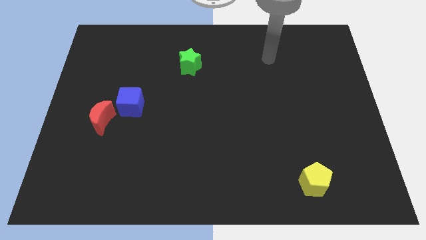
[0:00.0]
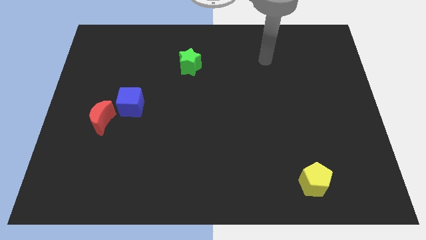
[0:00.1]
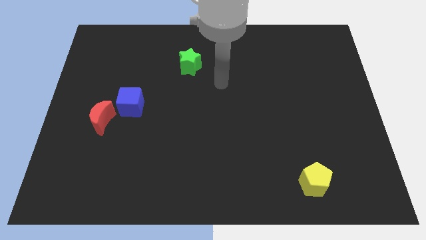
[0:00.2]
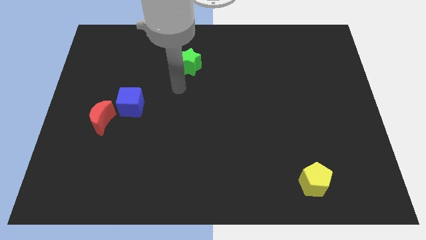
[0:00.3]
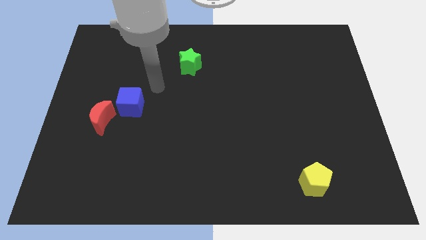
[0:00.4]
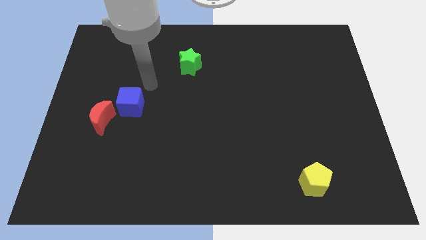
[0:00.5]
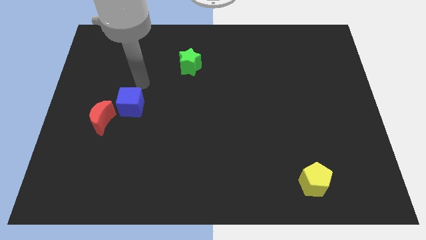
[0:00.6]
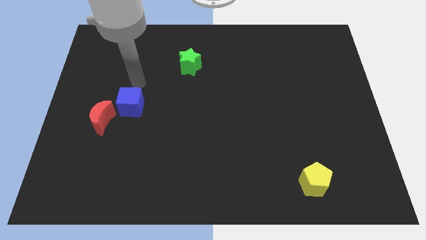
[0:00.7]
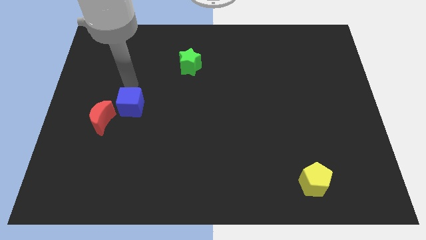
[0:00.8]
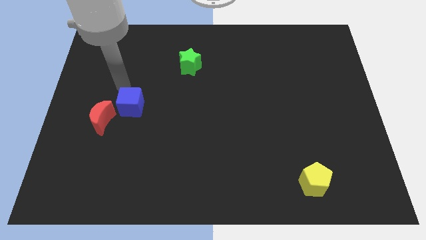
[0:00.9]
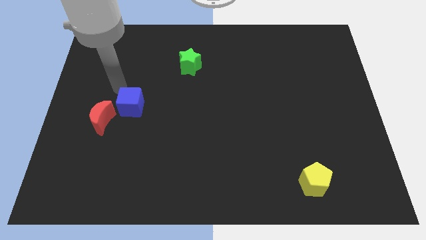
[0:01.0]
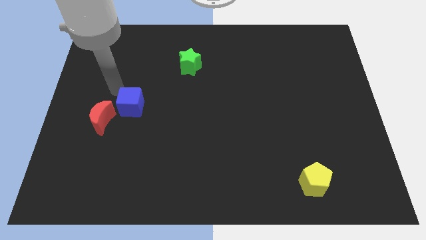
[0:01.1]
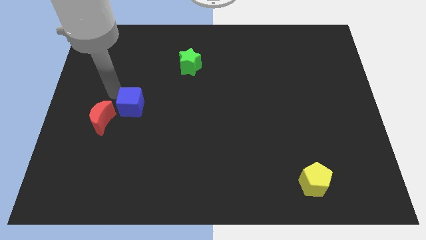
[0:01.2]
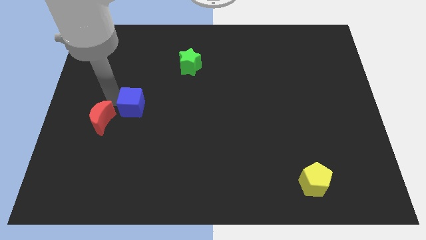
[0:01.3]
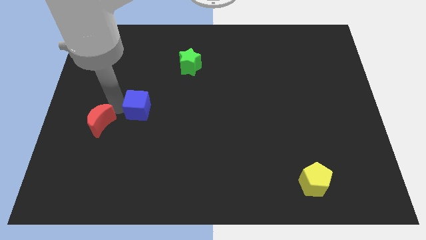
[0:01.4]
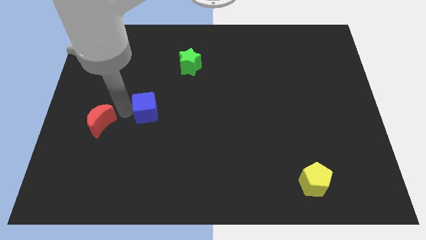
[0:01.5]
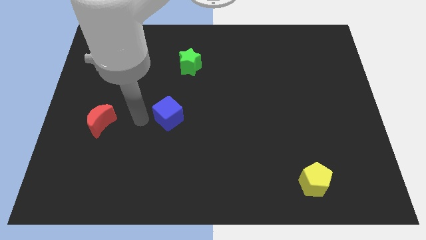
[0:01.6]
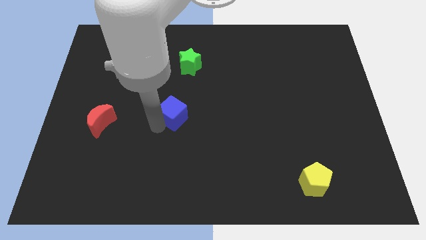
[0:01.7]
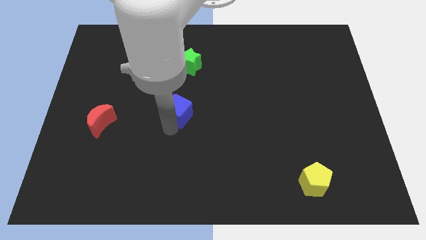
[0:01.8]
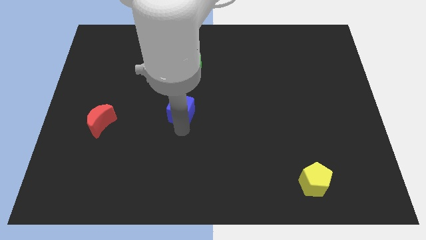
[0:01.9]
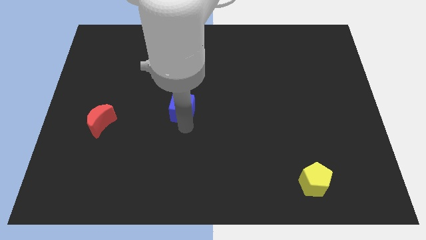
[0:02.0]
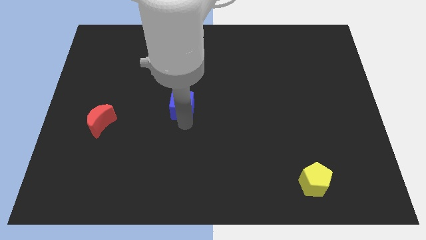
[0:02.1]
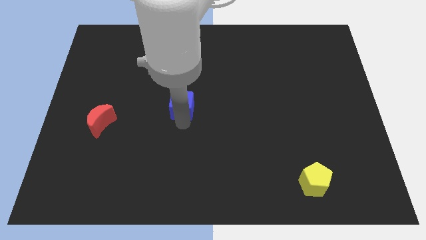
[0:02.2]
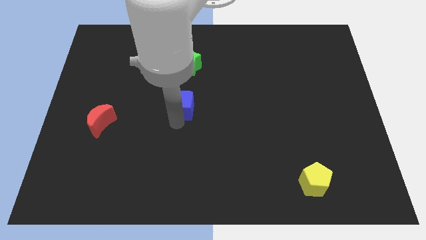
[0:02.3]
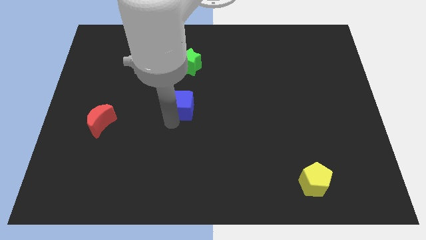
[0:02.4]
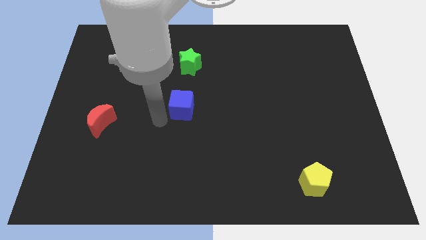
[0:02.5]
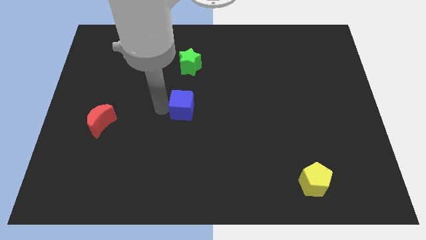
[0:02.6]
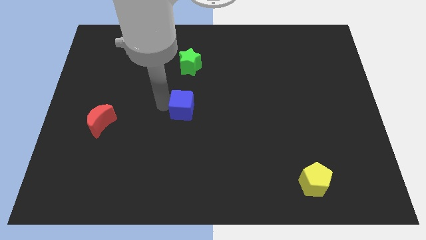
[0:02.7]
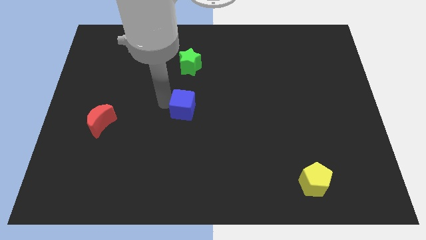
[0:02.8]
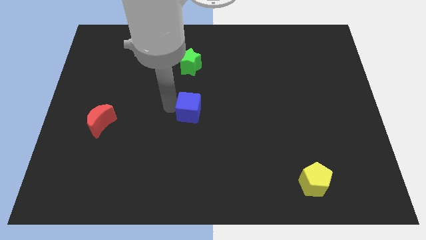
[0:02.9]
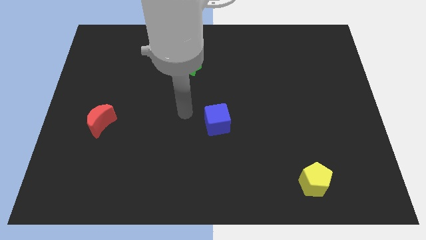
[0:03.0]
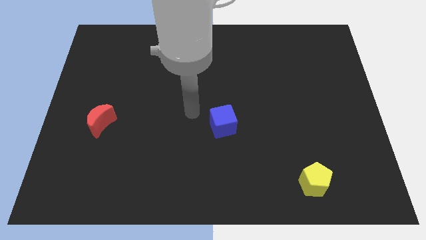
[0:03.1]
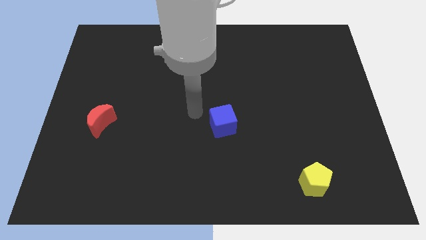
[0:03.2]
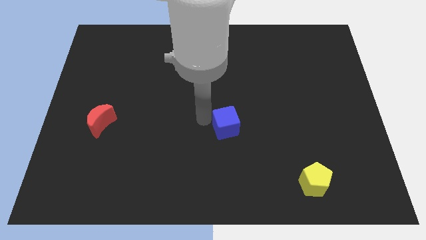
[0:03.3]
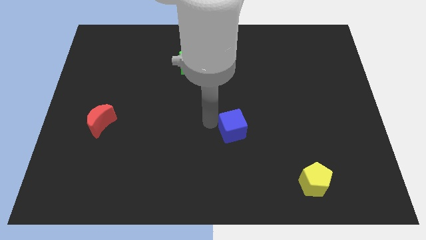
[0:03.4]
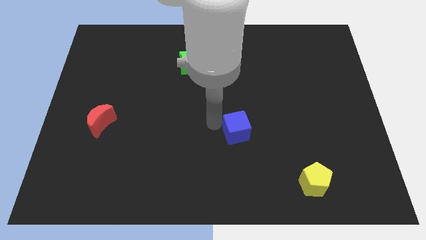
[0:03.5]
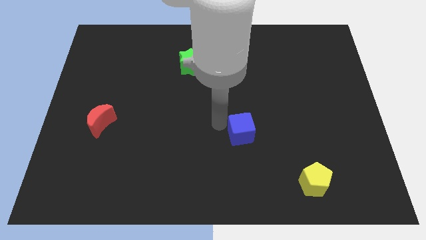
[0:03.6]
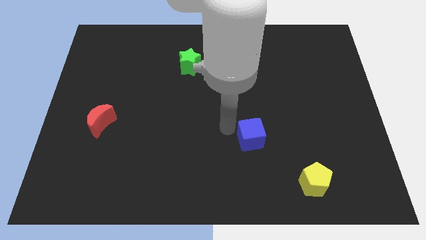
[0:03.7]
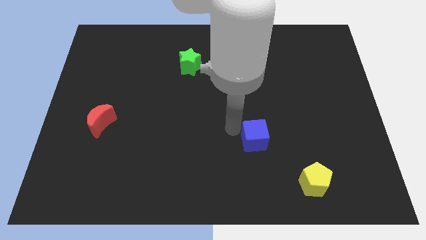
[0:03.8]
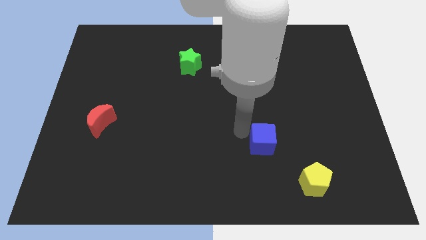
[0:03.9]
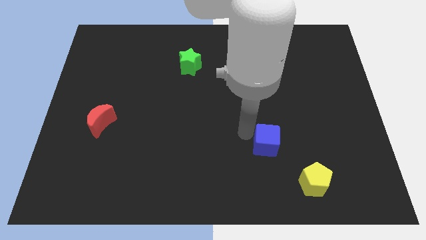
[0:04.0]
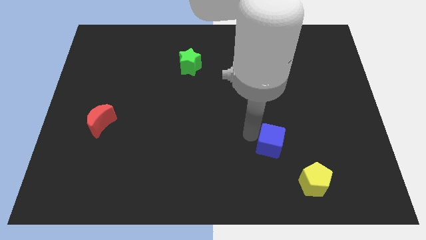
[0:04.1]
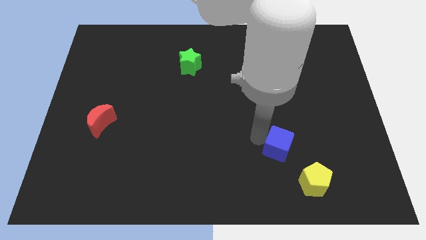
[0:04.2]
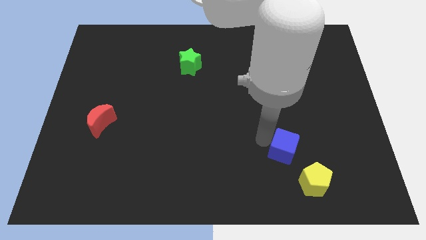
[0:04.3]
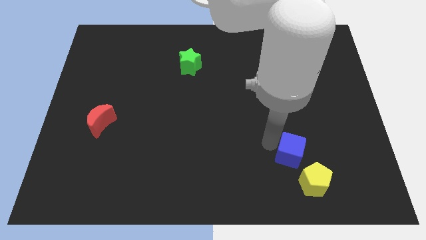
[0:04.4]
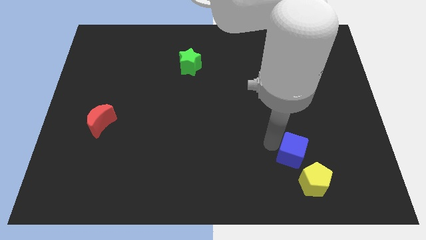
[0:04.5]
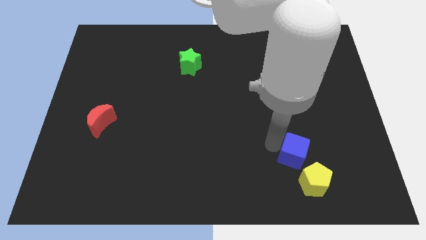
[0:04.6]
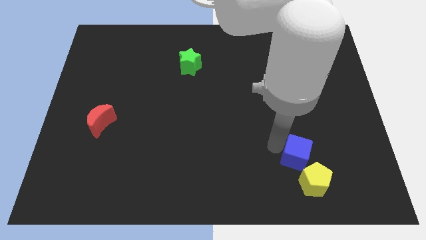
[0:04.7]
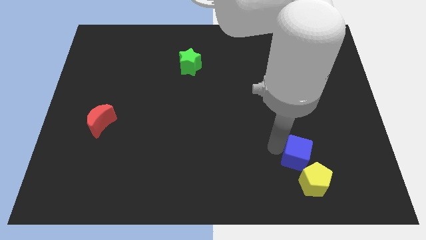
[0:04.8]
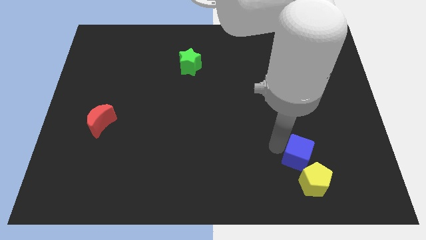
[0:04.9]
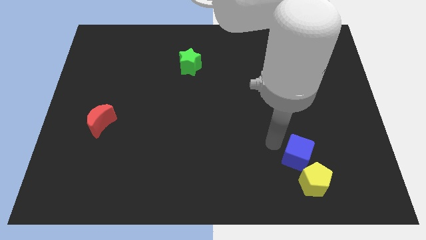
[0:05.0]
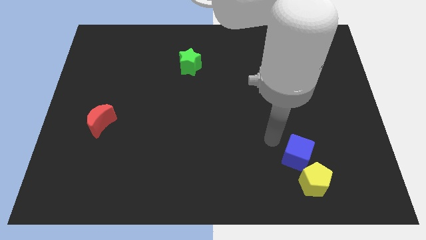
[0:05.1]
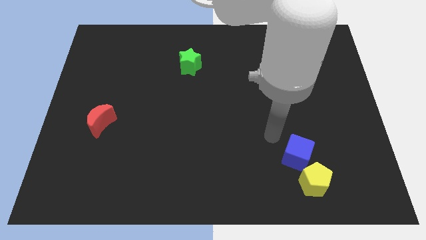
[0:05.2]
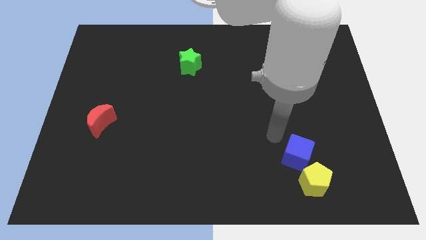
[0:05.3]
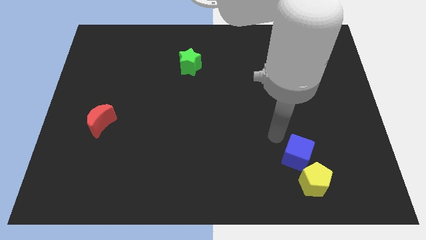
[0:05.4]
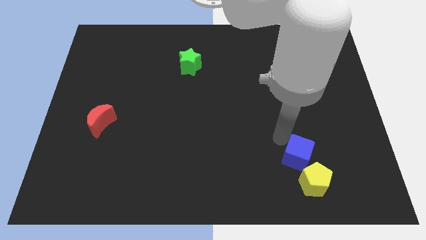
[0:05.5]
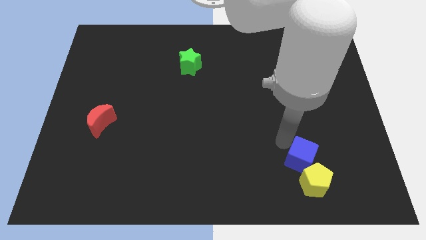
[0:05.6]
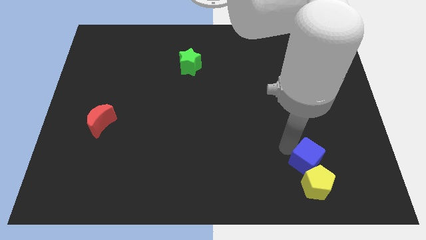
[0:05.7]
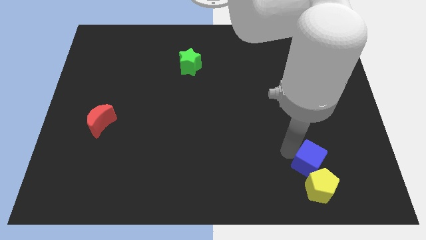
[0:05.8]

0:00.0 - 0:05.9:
move the blue block to the yellow block

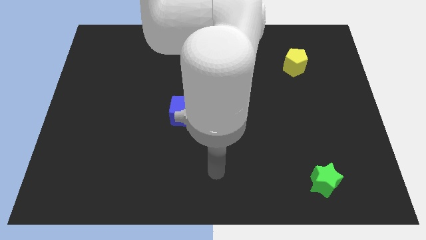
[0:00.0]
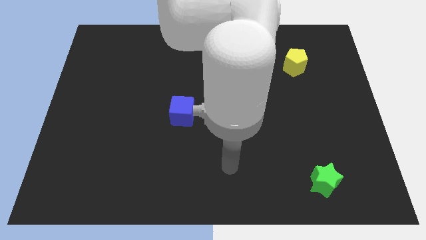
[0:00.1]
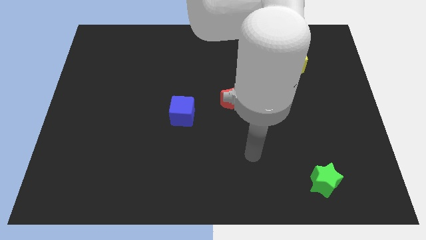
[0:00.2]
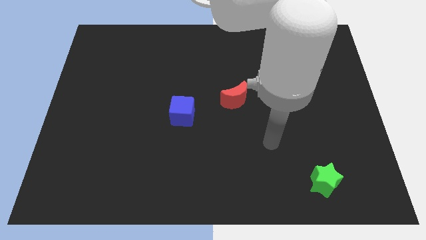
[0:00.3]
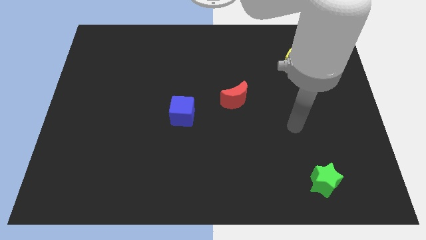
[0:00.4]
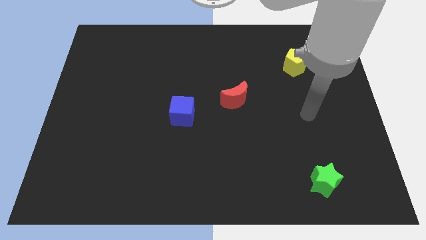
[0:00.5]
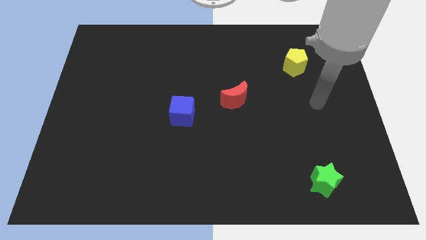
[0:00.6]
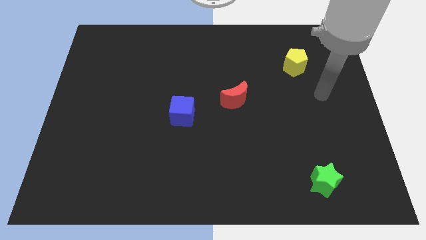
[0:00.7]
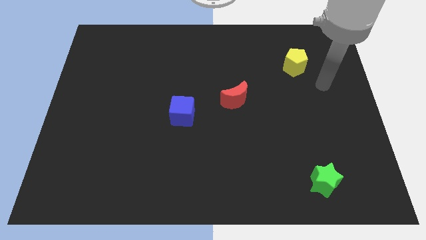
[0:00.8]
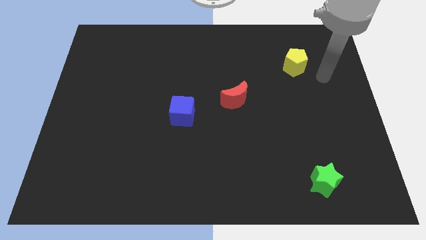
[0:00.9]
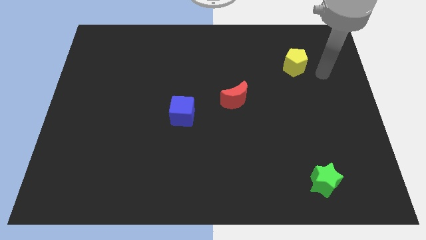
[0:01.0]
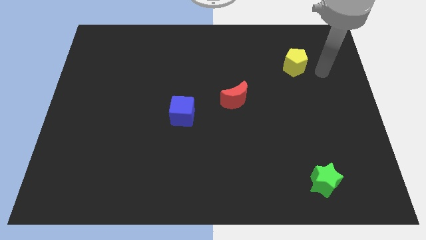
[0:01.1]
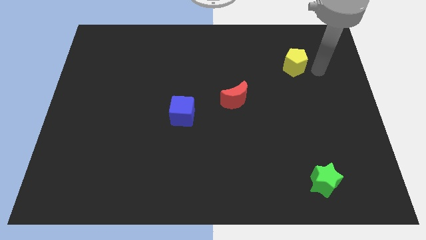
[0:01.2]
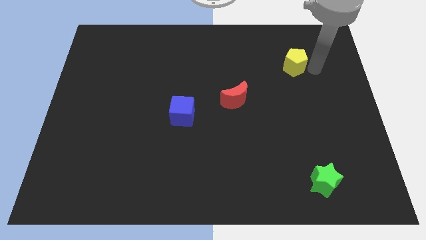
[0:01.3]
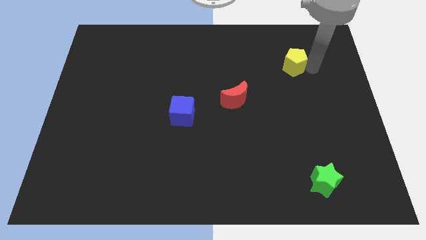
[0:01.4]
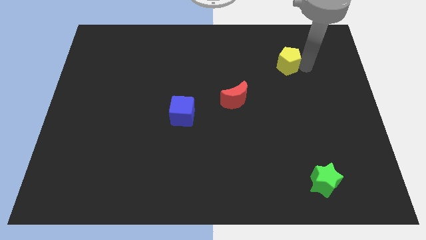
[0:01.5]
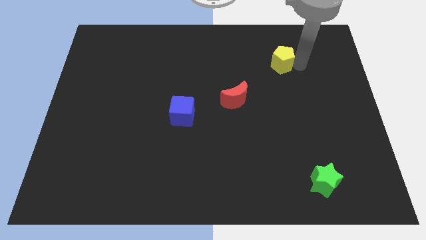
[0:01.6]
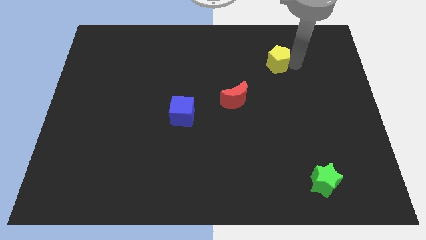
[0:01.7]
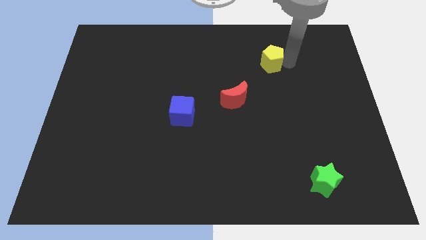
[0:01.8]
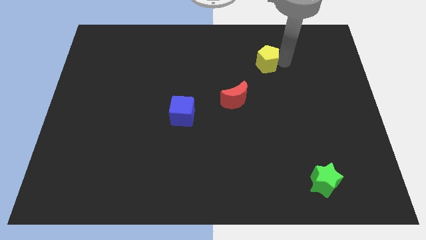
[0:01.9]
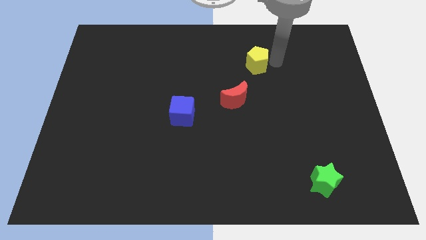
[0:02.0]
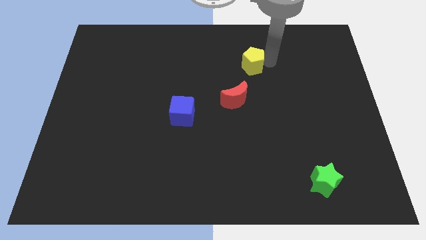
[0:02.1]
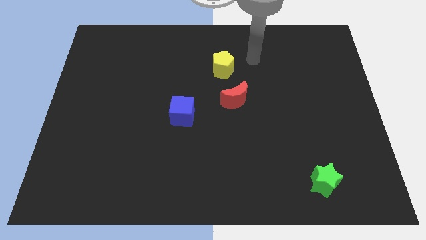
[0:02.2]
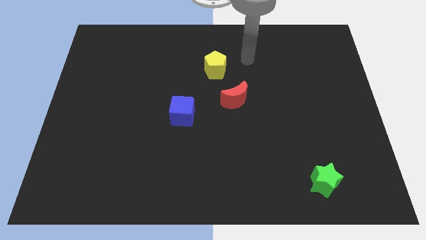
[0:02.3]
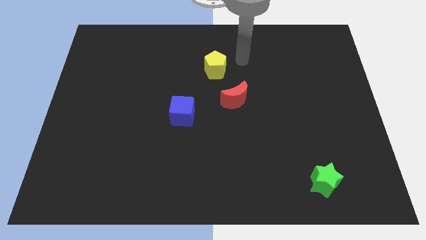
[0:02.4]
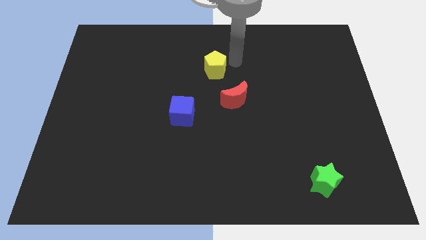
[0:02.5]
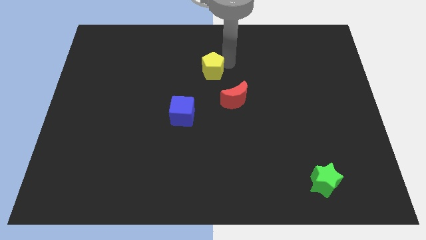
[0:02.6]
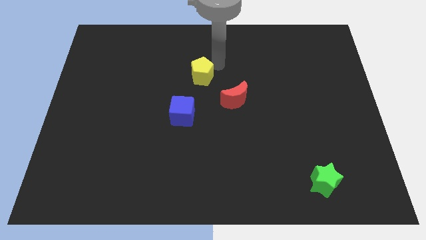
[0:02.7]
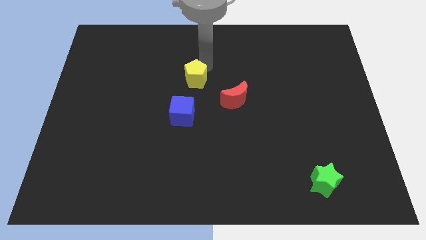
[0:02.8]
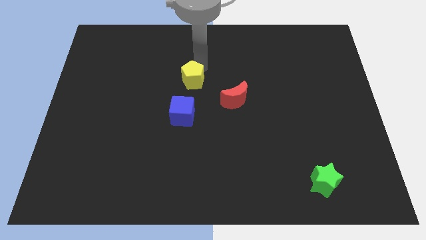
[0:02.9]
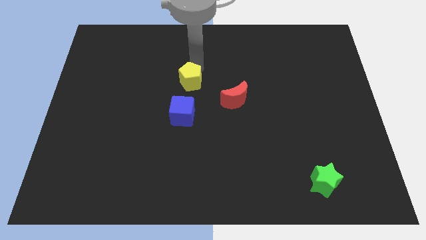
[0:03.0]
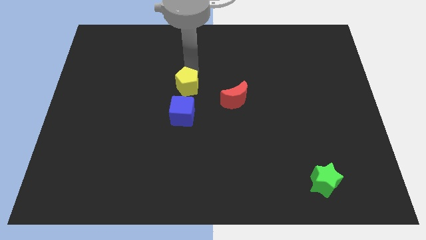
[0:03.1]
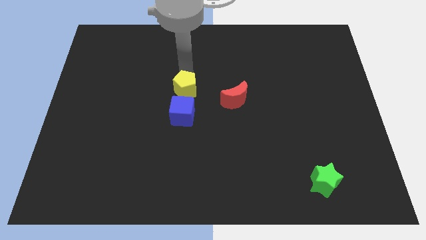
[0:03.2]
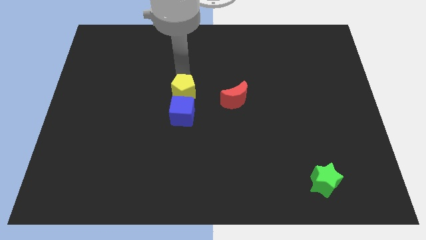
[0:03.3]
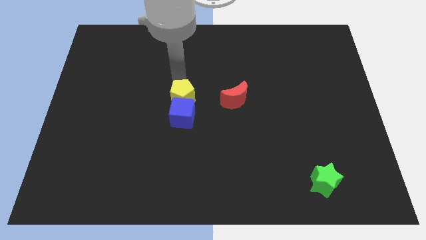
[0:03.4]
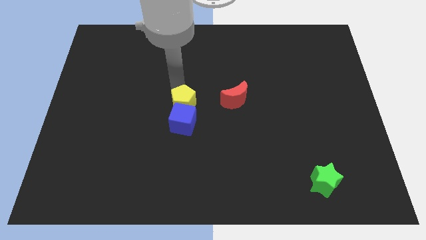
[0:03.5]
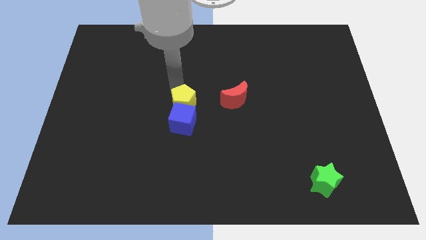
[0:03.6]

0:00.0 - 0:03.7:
slide the yellow block towards the blue cube
